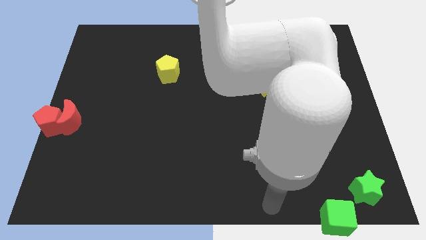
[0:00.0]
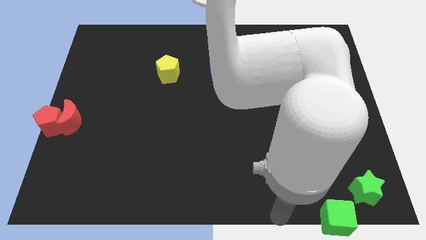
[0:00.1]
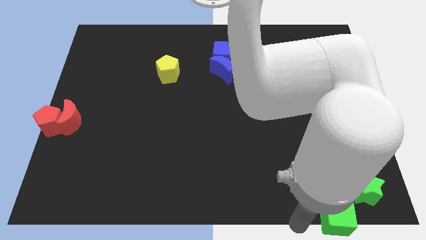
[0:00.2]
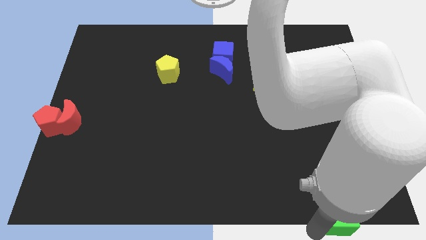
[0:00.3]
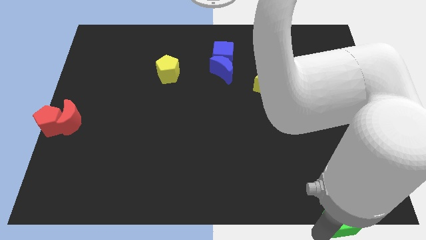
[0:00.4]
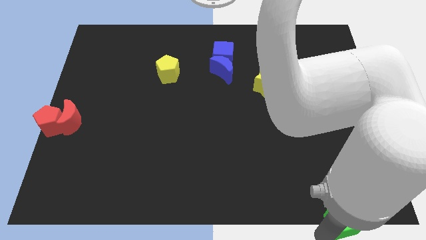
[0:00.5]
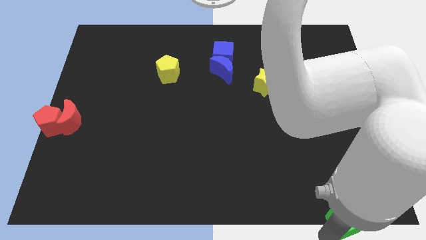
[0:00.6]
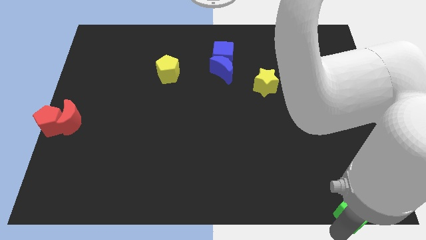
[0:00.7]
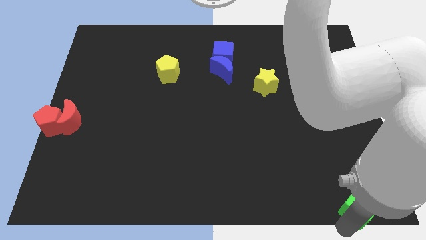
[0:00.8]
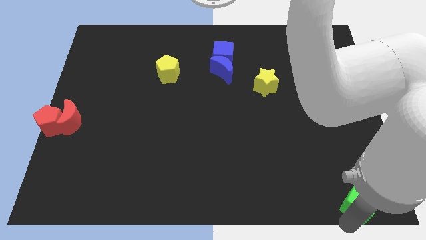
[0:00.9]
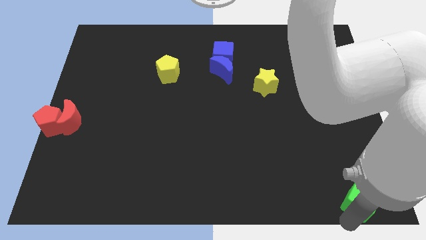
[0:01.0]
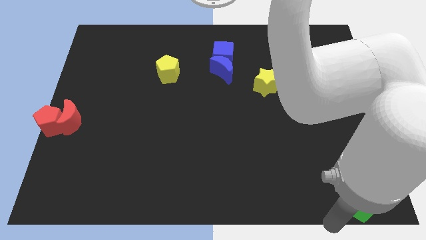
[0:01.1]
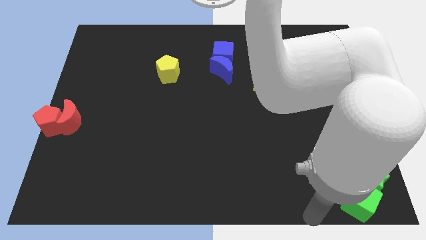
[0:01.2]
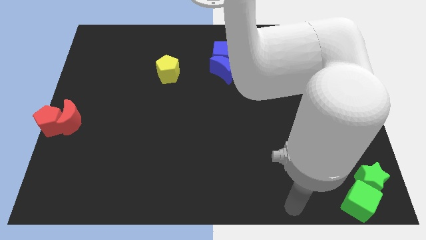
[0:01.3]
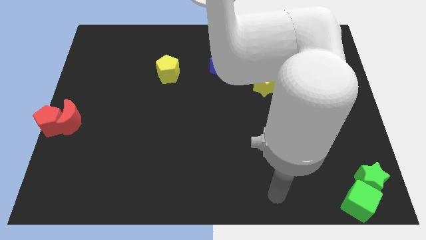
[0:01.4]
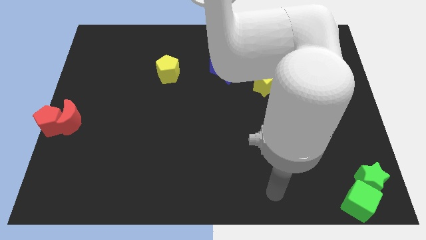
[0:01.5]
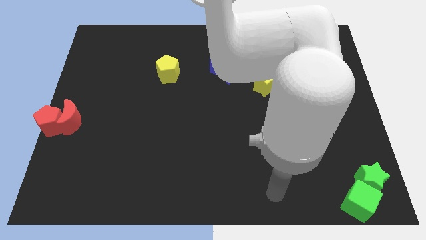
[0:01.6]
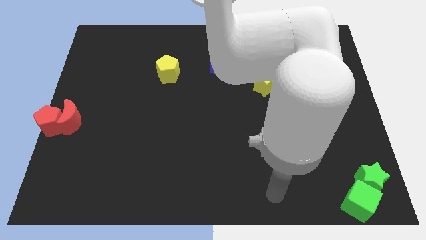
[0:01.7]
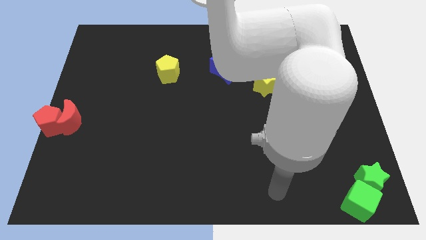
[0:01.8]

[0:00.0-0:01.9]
move the green cube close to the green star at the bottom right side of the board

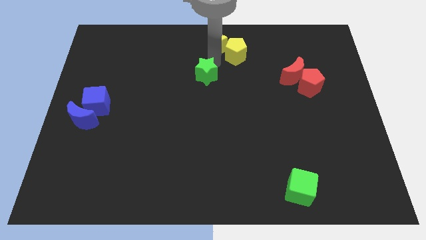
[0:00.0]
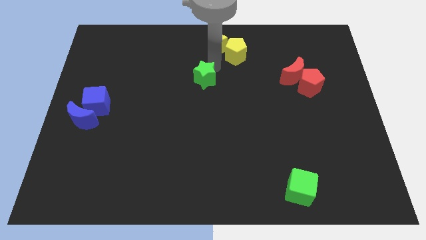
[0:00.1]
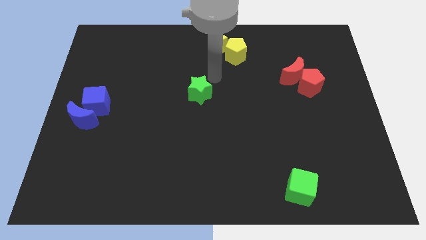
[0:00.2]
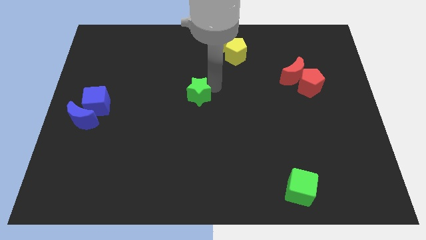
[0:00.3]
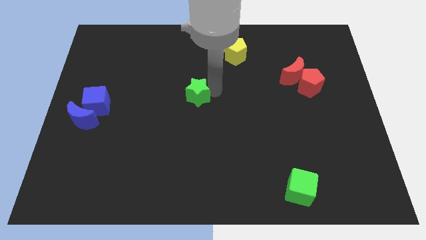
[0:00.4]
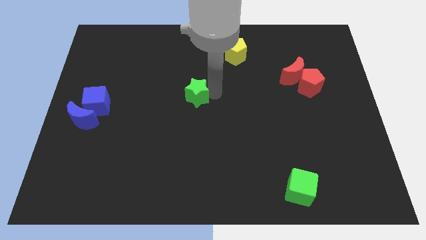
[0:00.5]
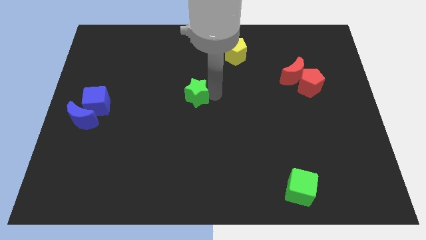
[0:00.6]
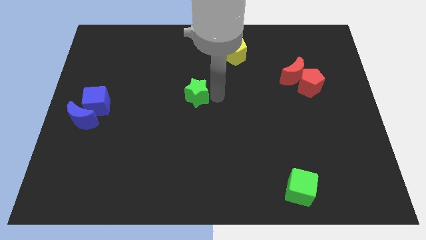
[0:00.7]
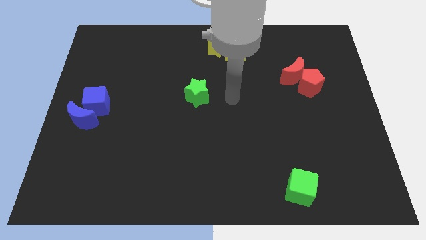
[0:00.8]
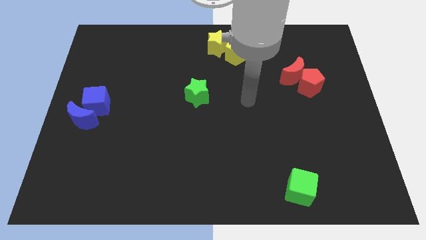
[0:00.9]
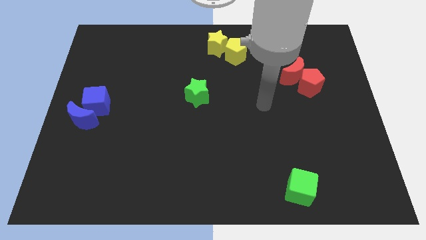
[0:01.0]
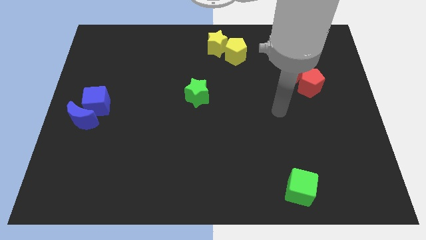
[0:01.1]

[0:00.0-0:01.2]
push the green star towards the center of the board

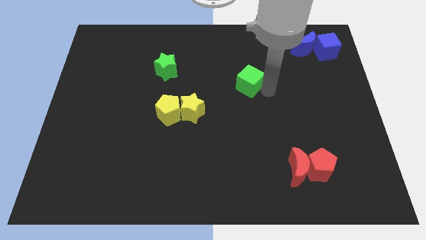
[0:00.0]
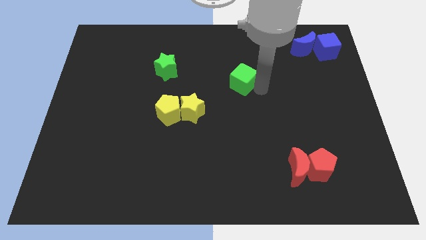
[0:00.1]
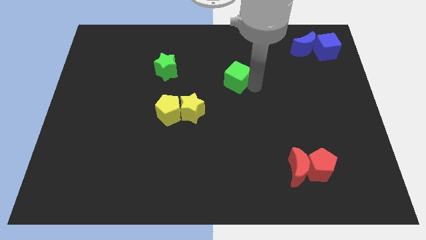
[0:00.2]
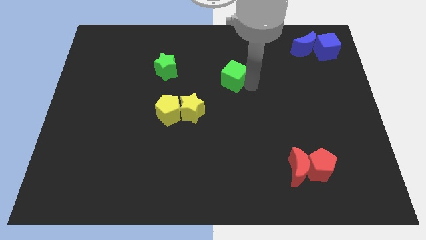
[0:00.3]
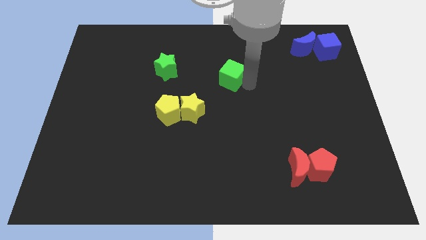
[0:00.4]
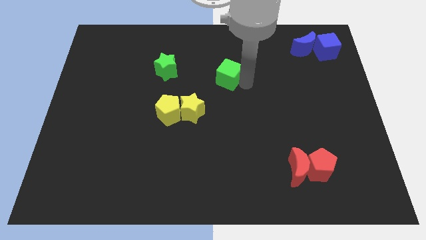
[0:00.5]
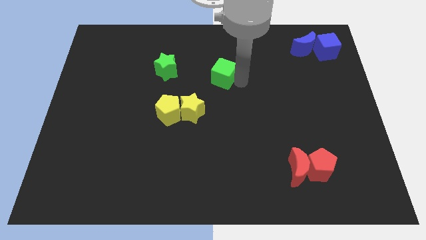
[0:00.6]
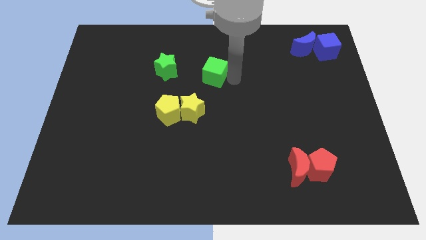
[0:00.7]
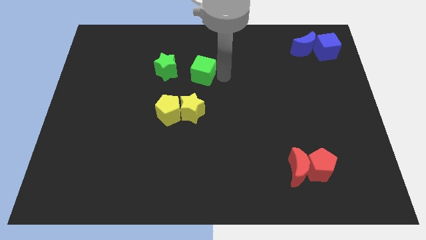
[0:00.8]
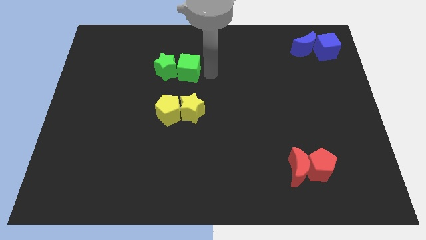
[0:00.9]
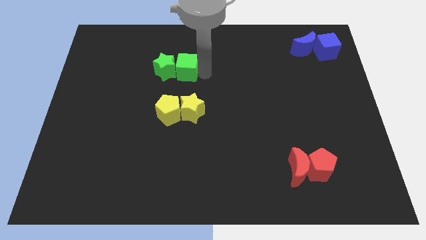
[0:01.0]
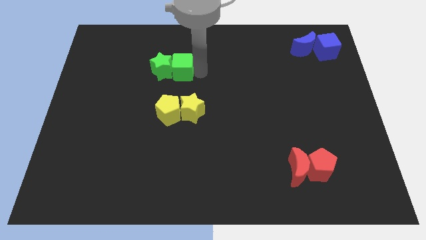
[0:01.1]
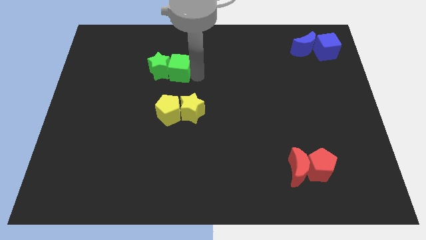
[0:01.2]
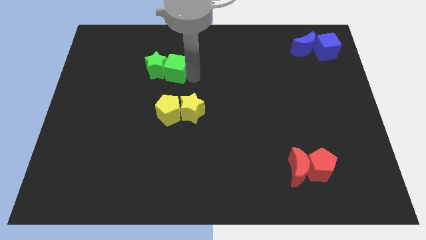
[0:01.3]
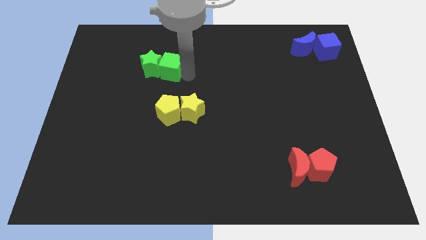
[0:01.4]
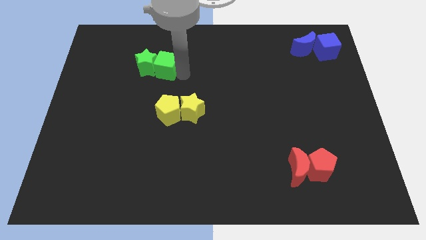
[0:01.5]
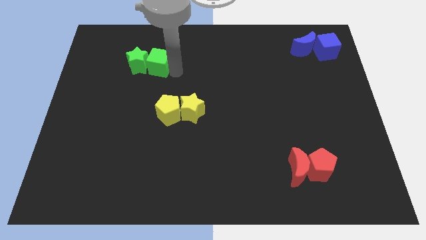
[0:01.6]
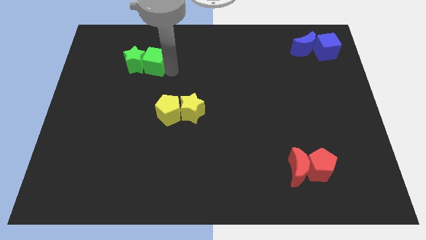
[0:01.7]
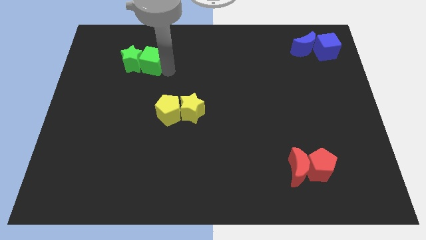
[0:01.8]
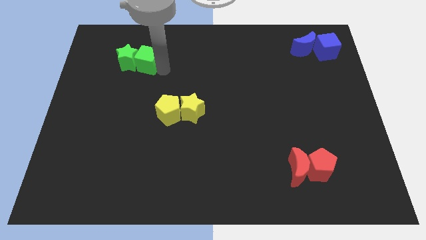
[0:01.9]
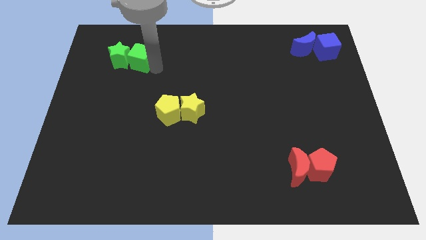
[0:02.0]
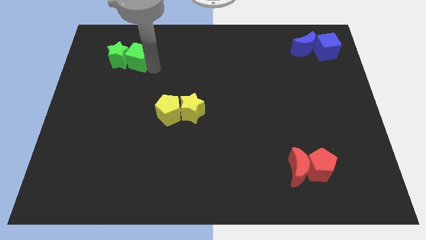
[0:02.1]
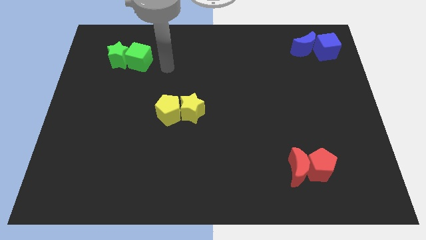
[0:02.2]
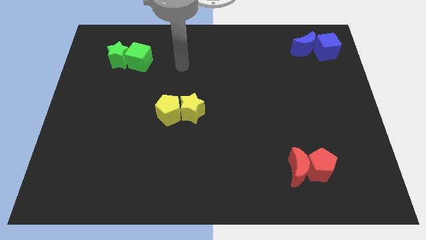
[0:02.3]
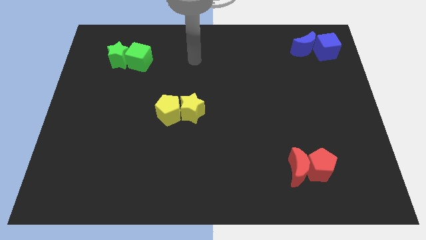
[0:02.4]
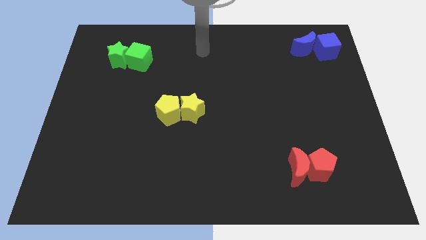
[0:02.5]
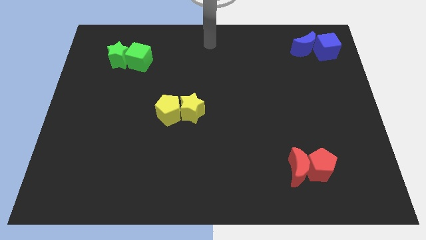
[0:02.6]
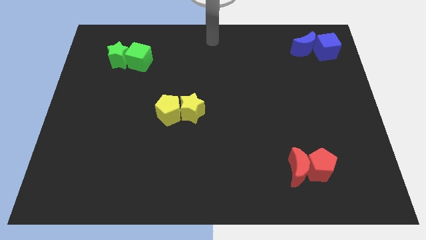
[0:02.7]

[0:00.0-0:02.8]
move green blocks to the top left of the board

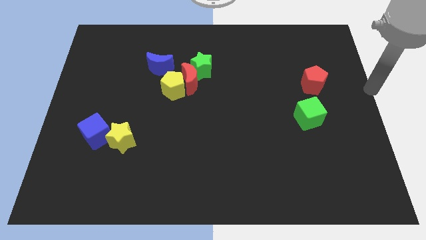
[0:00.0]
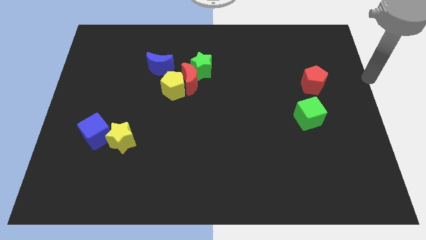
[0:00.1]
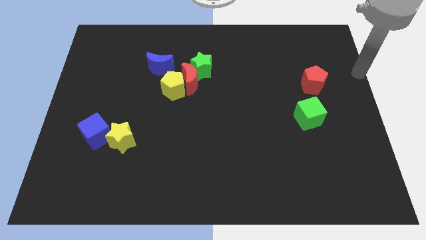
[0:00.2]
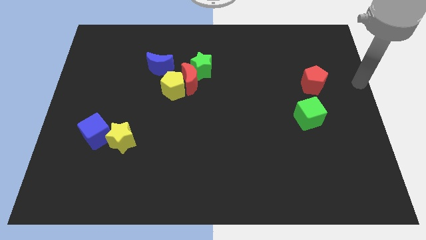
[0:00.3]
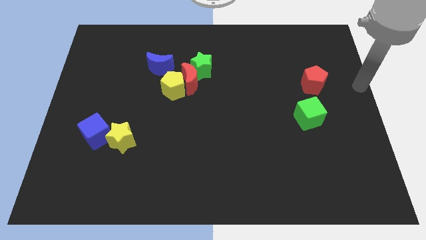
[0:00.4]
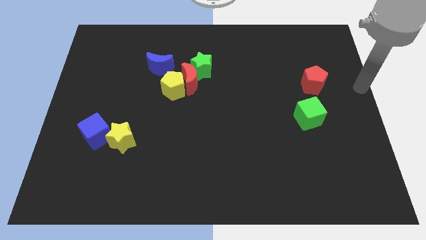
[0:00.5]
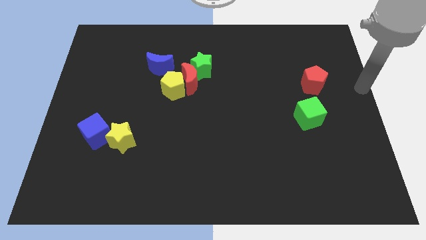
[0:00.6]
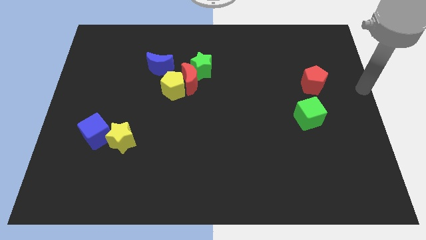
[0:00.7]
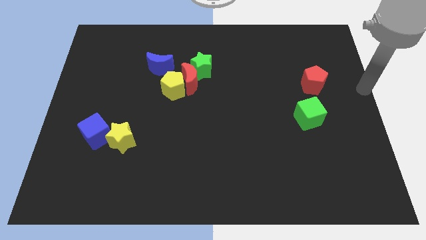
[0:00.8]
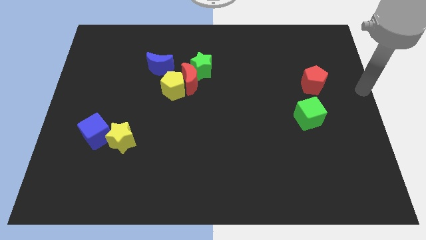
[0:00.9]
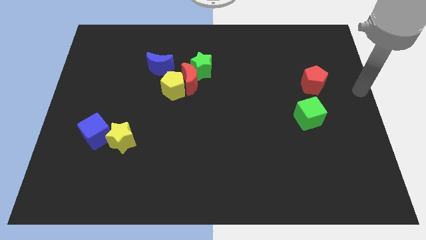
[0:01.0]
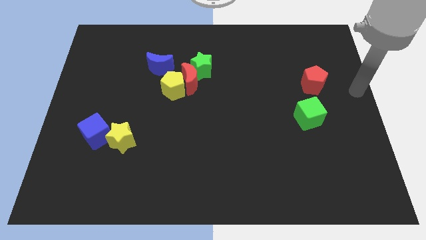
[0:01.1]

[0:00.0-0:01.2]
move the arm to the right center of the board

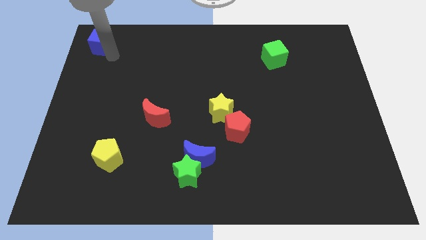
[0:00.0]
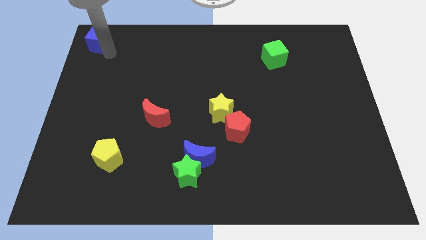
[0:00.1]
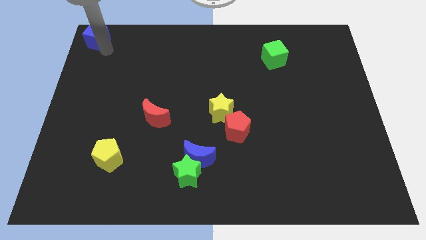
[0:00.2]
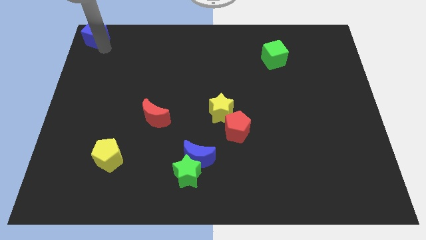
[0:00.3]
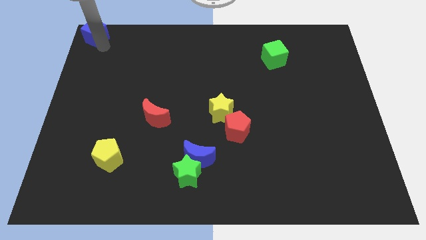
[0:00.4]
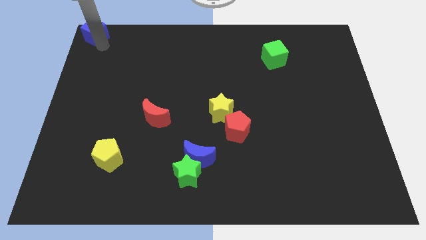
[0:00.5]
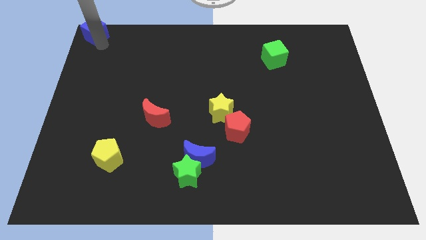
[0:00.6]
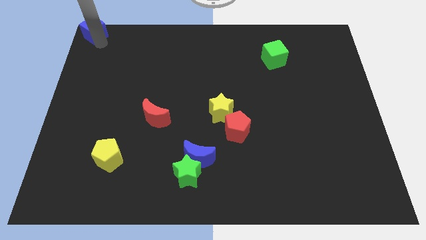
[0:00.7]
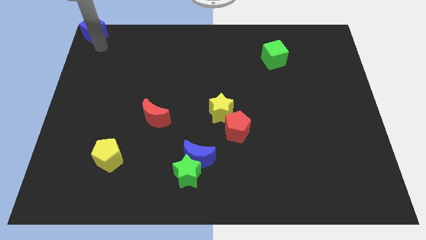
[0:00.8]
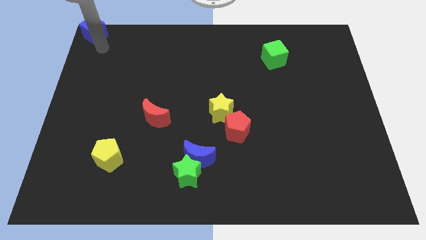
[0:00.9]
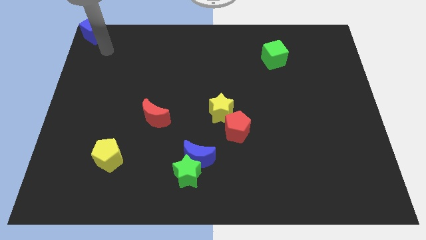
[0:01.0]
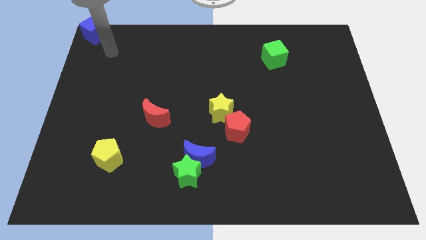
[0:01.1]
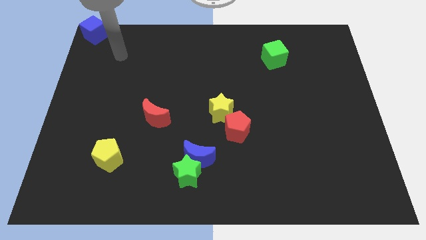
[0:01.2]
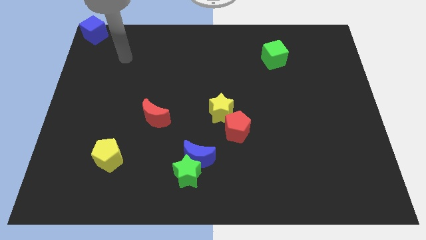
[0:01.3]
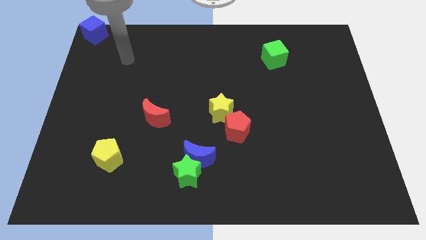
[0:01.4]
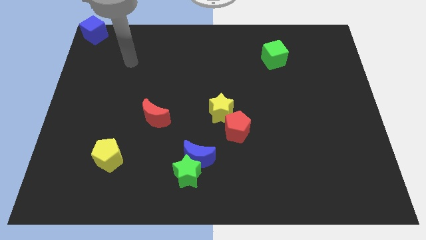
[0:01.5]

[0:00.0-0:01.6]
place the blue cube on top left corner of the board

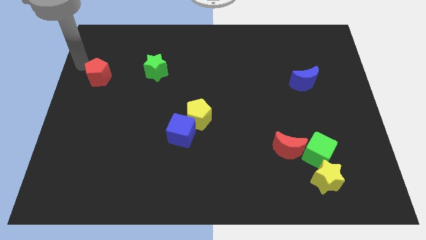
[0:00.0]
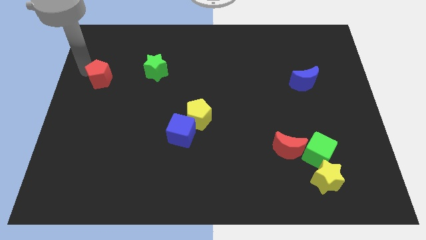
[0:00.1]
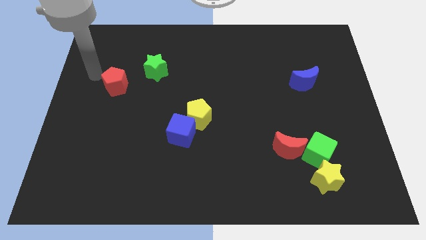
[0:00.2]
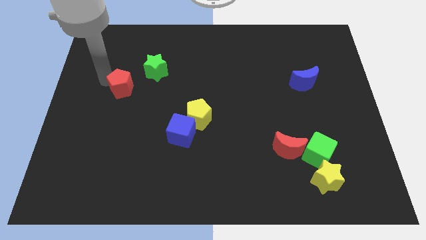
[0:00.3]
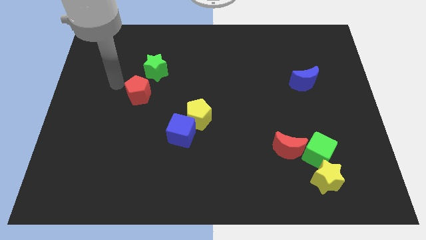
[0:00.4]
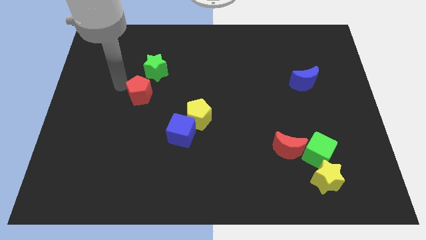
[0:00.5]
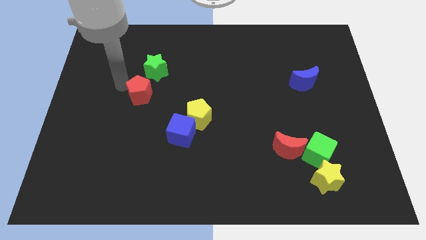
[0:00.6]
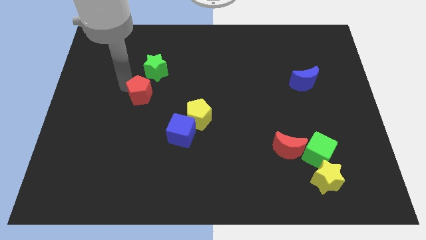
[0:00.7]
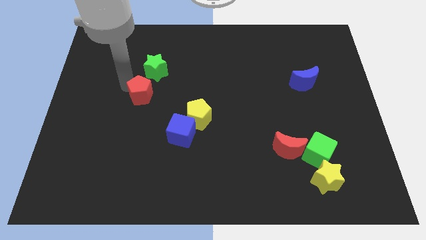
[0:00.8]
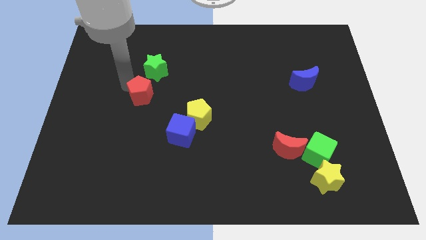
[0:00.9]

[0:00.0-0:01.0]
place red pentagon below green star
